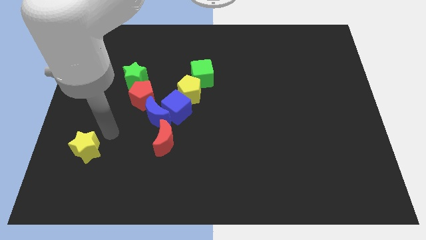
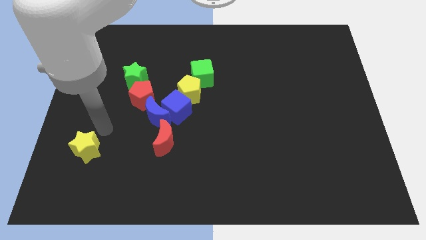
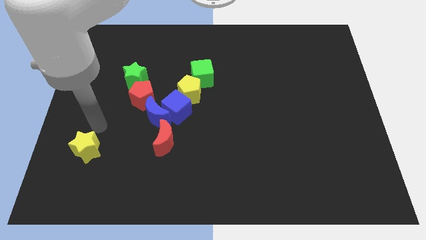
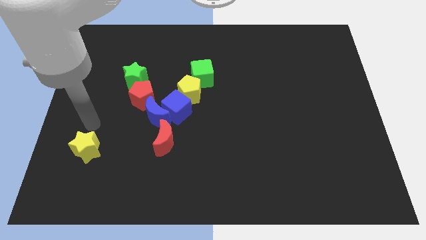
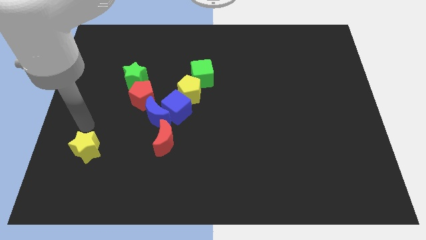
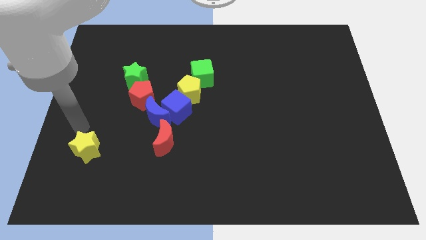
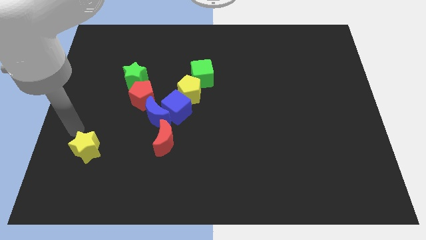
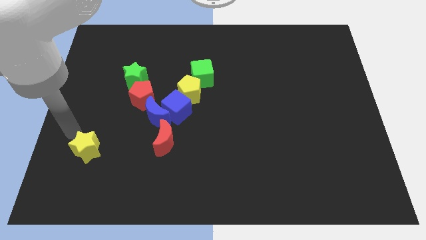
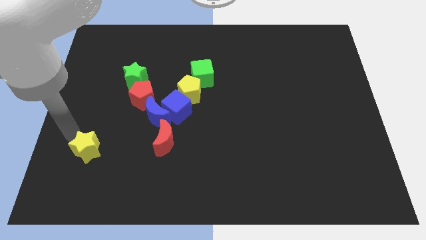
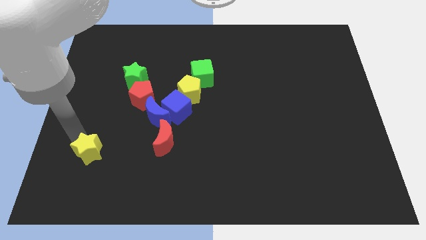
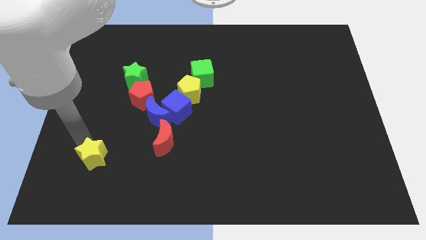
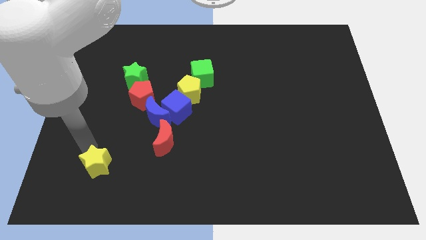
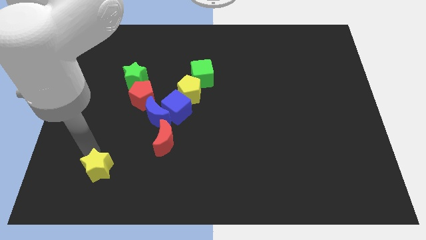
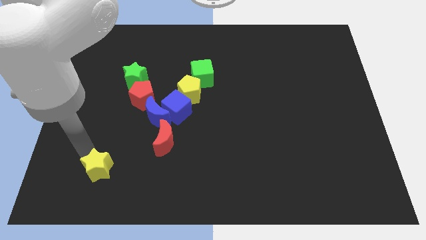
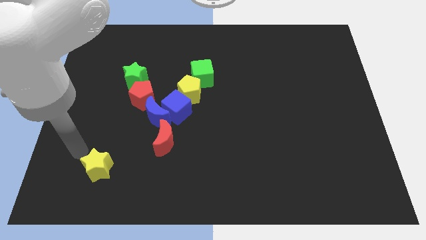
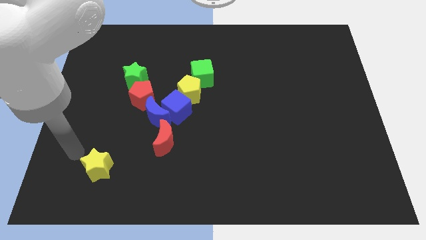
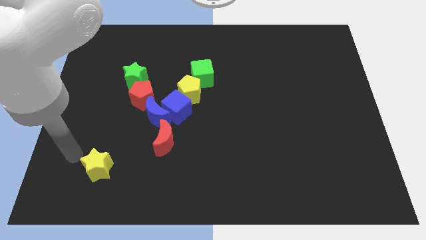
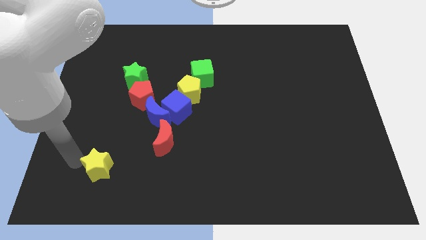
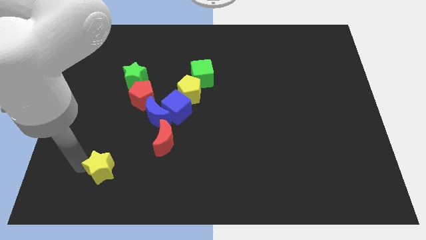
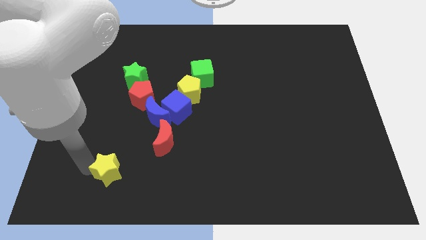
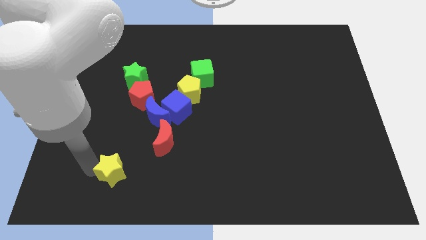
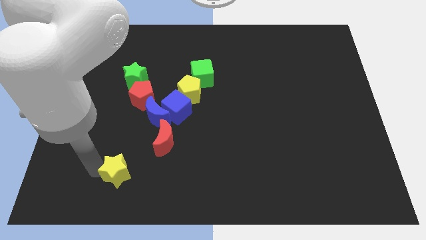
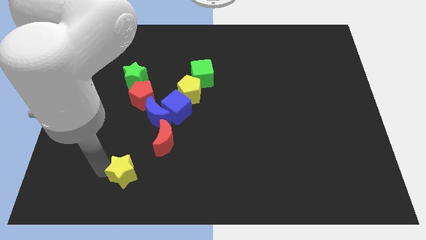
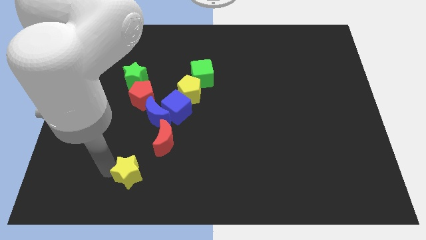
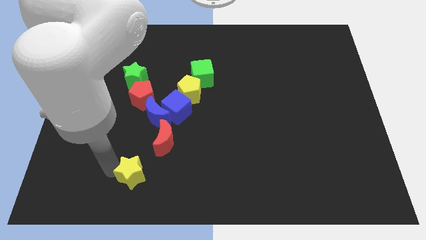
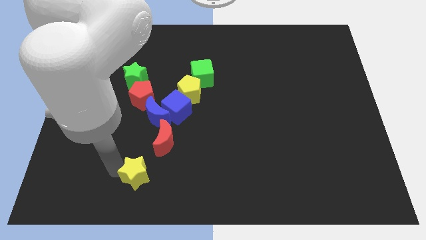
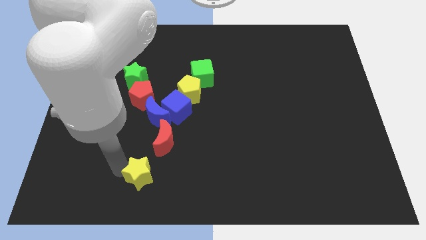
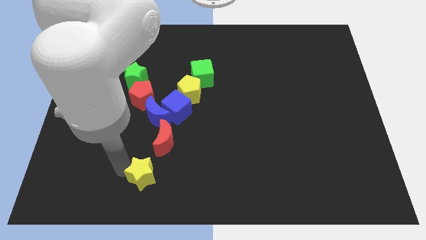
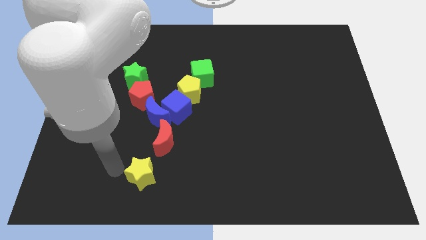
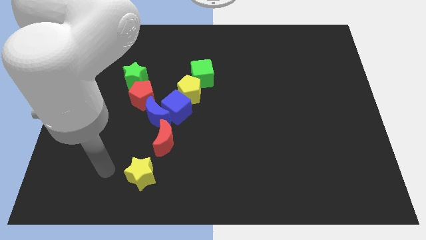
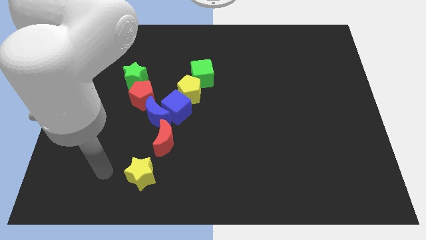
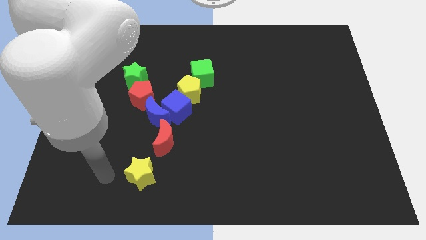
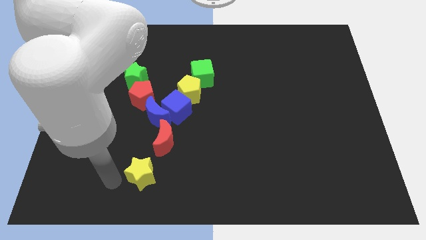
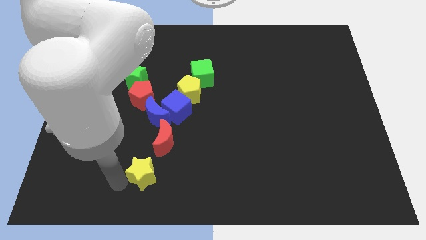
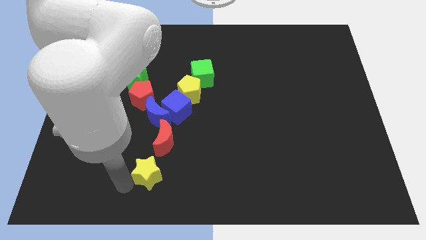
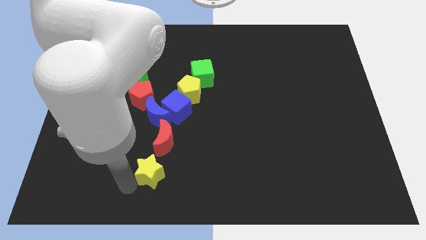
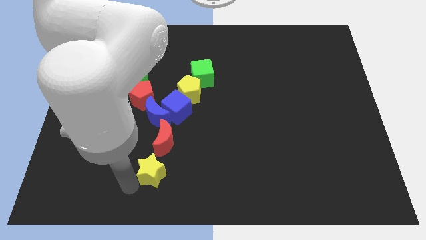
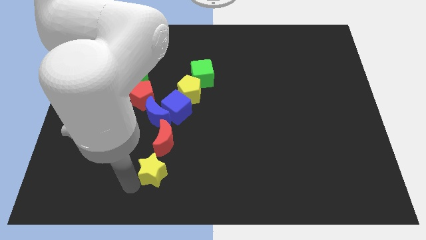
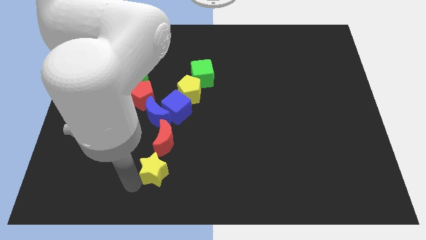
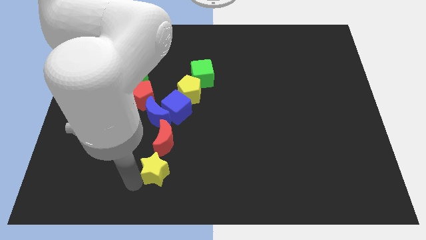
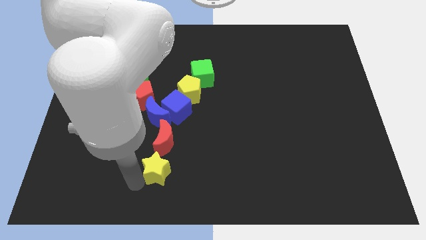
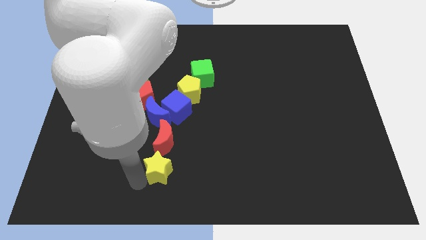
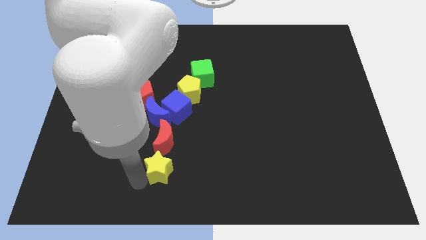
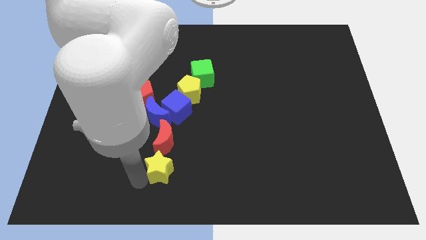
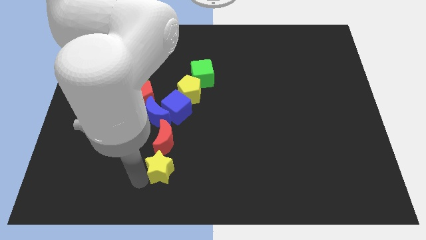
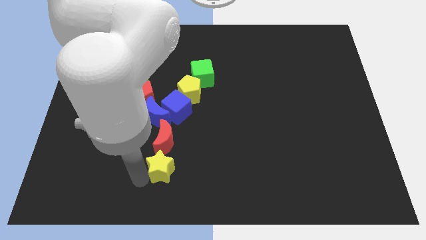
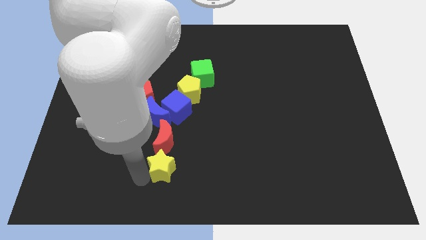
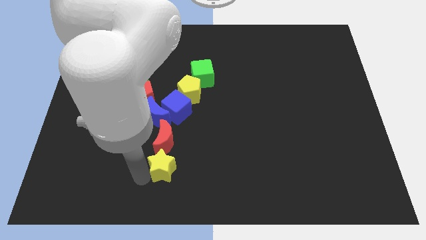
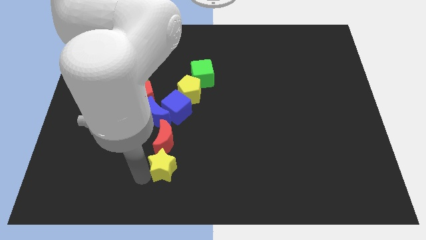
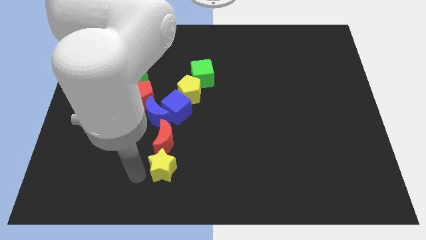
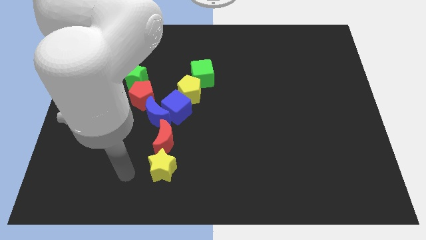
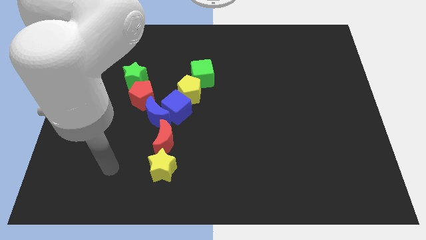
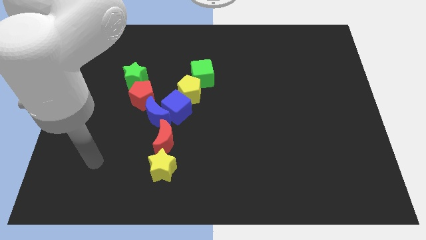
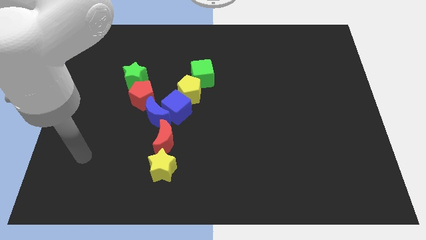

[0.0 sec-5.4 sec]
place the yellow star below the red crescent

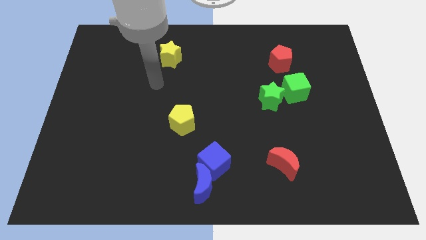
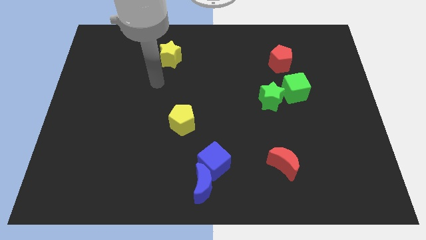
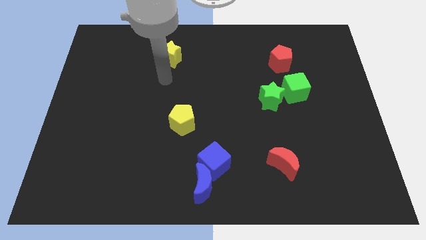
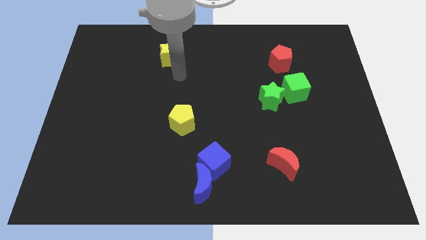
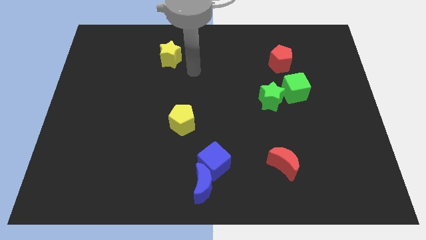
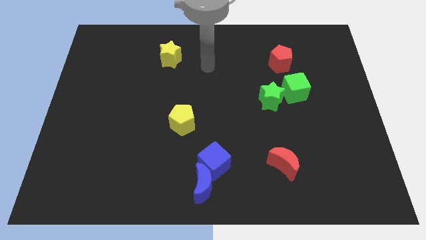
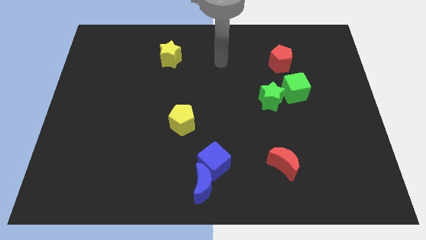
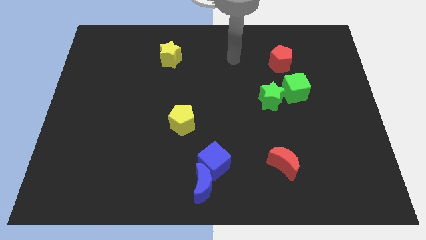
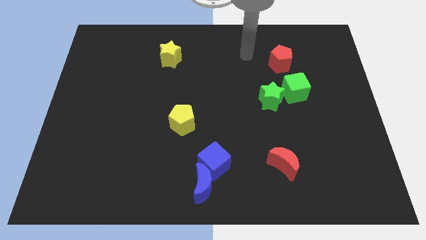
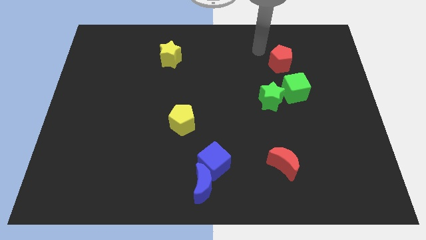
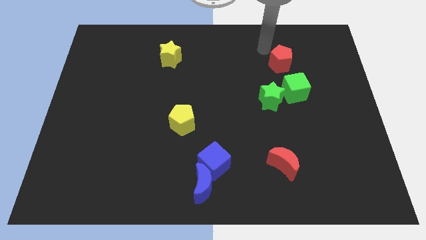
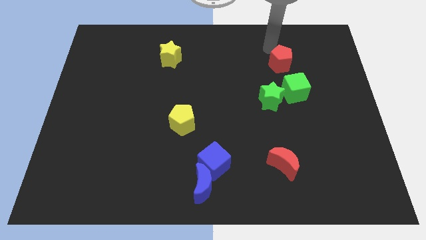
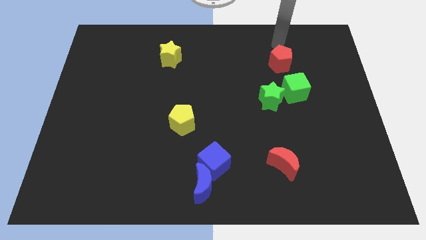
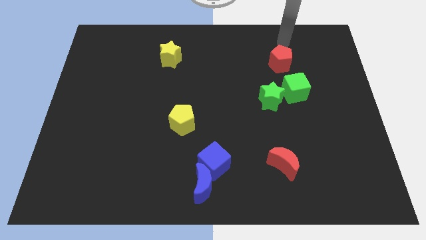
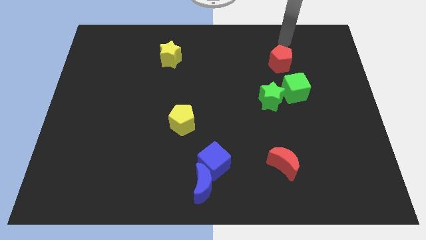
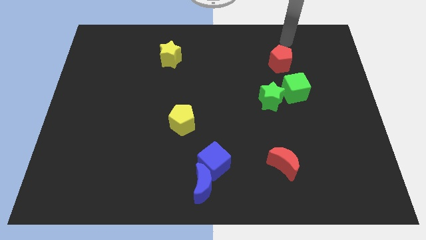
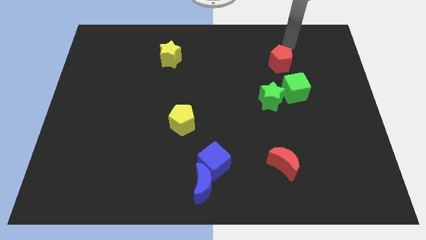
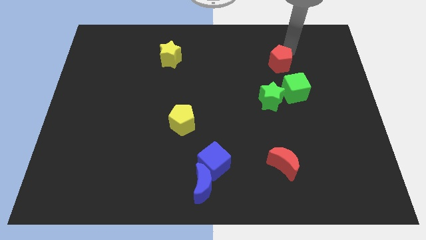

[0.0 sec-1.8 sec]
point your arm above the red pentagon

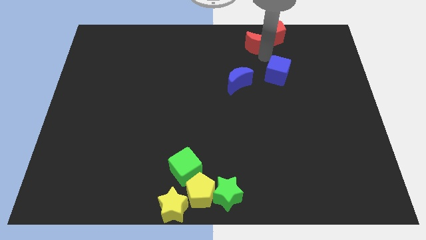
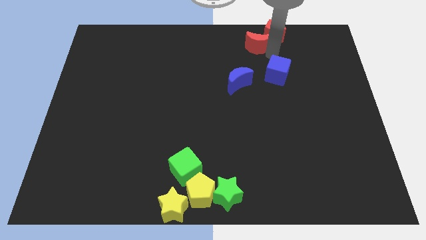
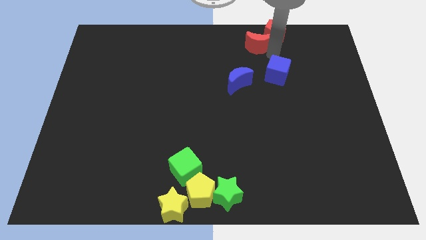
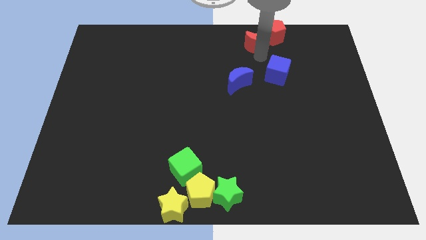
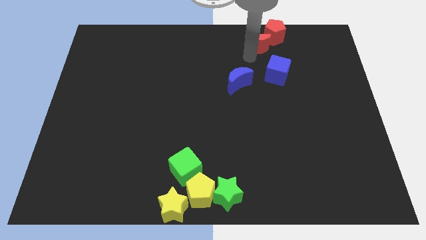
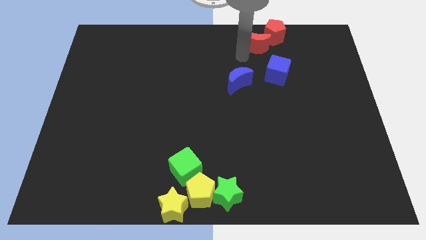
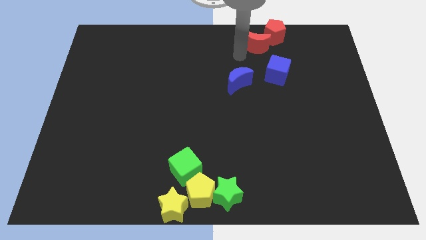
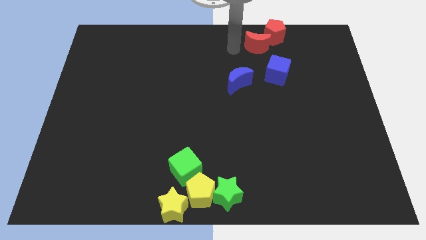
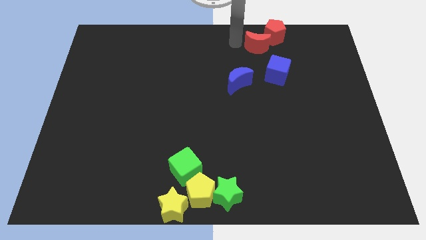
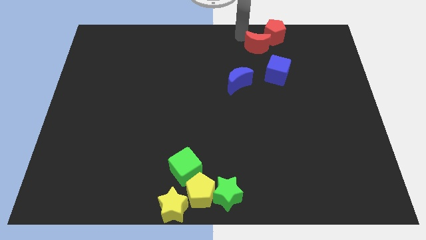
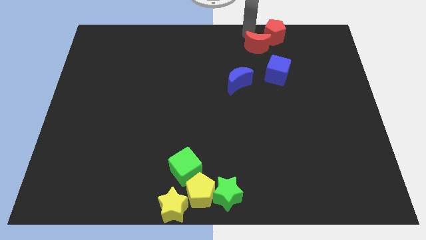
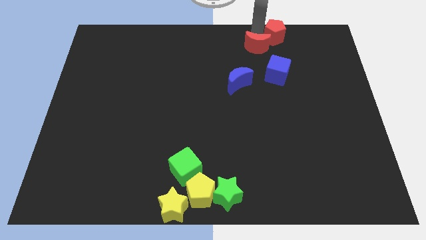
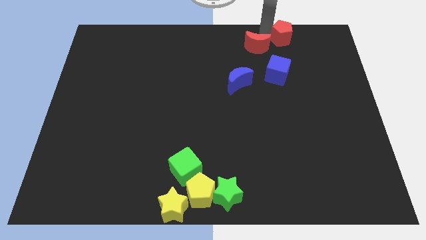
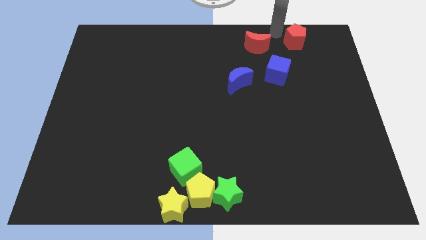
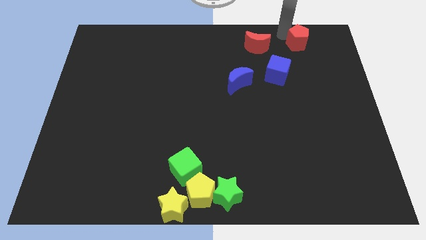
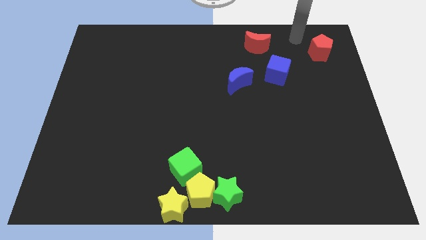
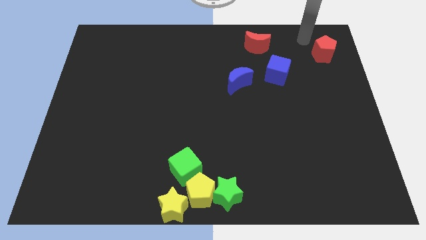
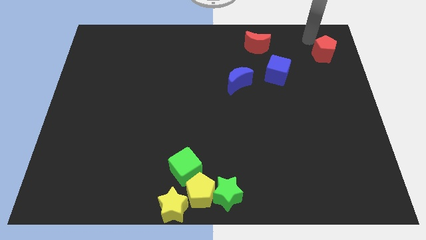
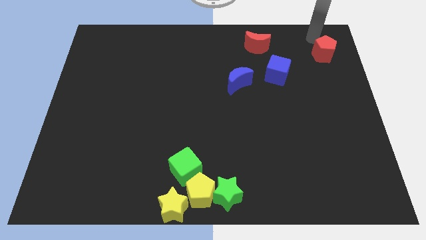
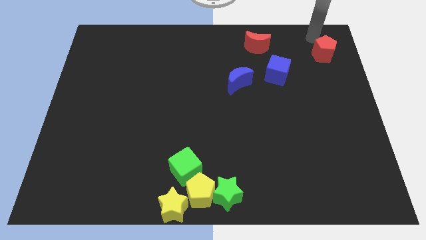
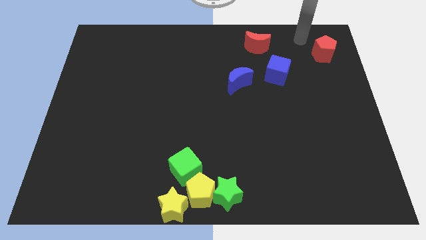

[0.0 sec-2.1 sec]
drag red pentagon towards top right side of the board
